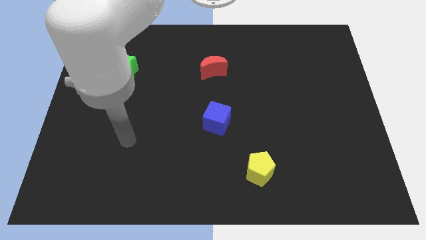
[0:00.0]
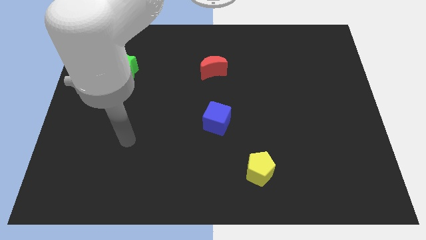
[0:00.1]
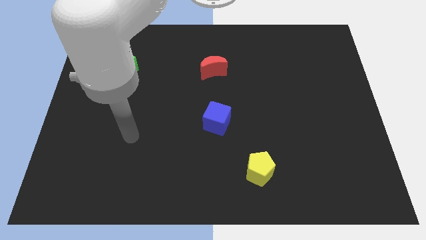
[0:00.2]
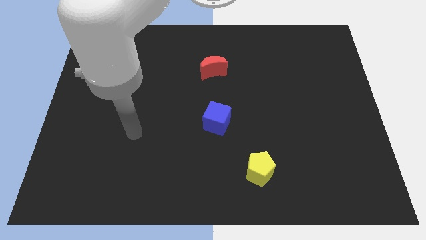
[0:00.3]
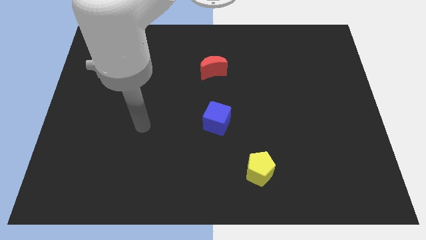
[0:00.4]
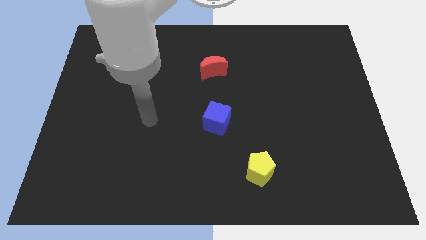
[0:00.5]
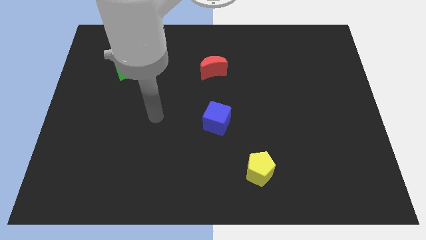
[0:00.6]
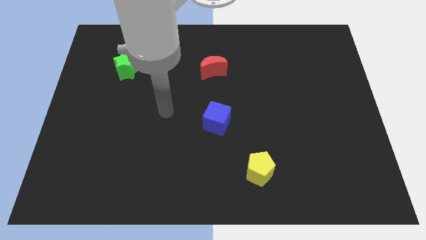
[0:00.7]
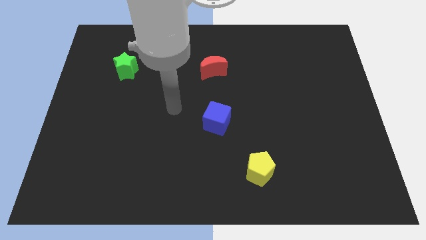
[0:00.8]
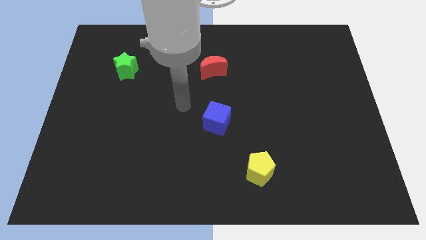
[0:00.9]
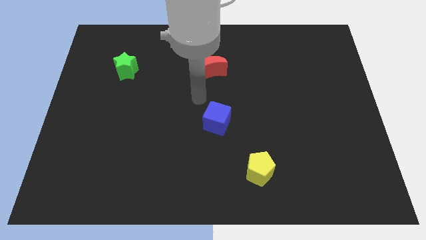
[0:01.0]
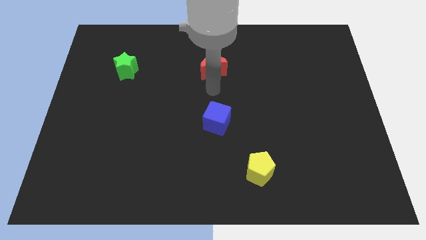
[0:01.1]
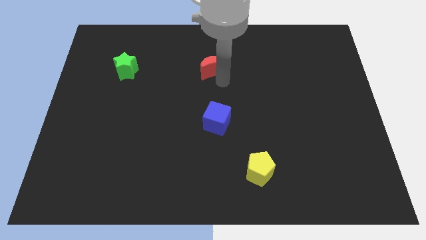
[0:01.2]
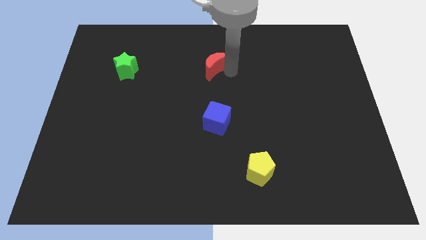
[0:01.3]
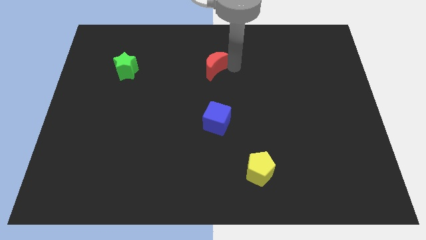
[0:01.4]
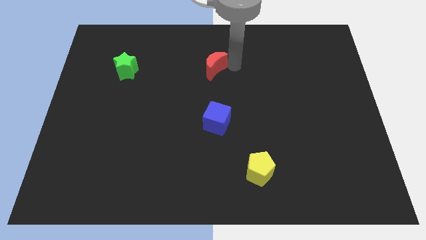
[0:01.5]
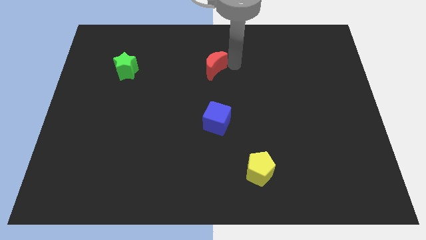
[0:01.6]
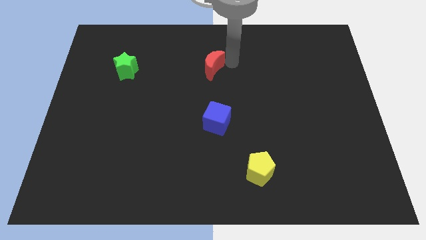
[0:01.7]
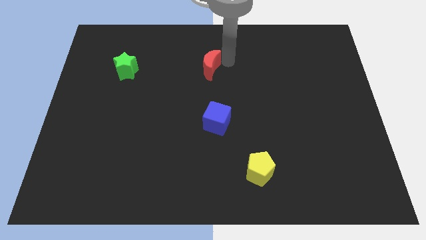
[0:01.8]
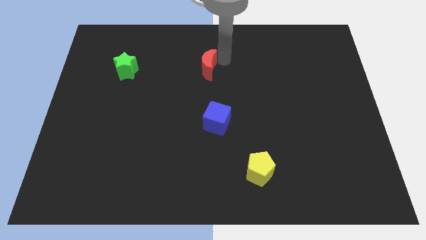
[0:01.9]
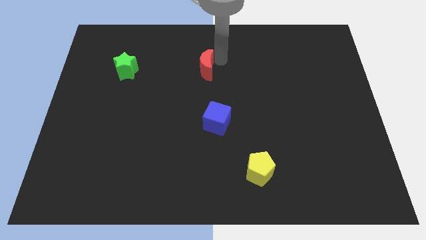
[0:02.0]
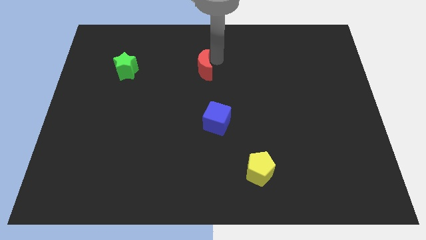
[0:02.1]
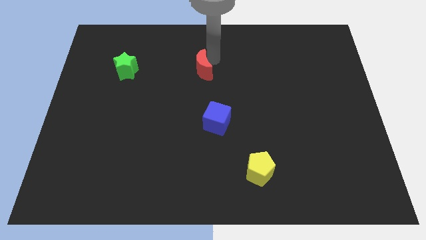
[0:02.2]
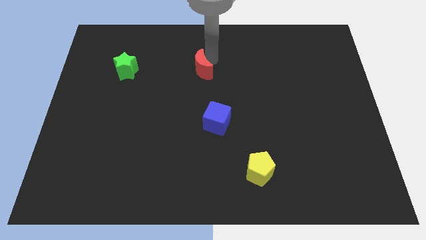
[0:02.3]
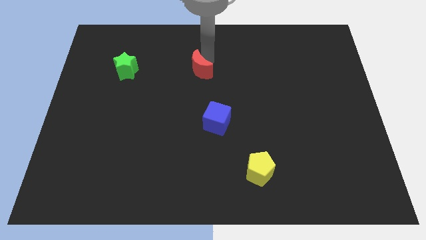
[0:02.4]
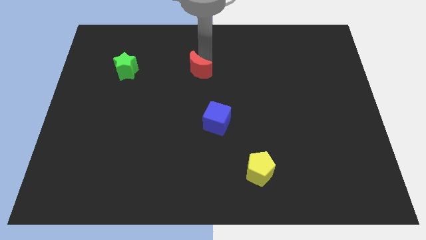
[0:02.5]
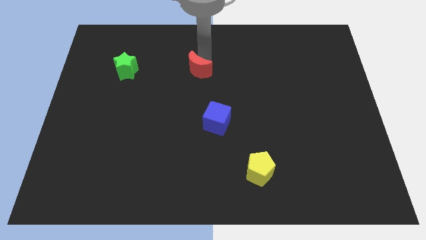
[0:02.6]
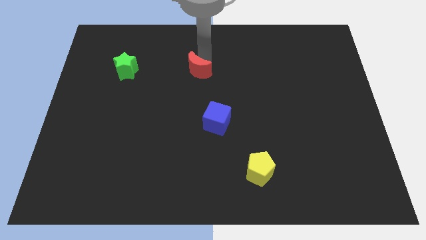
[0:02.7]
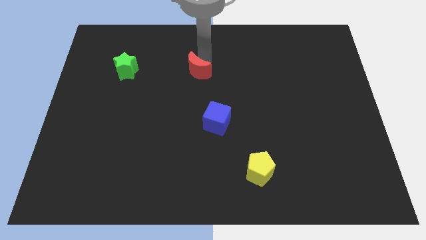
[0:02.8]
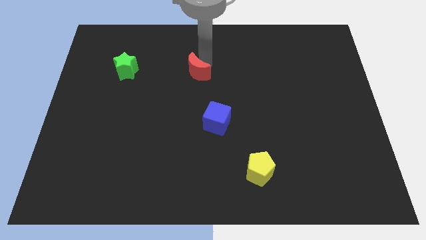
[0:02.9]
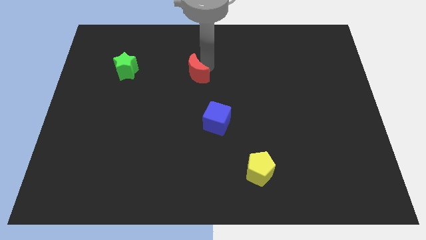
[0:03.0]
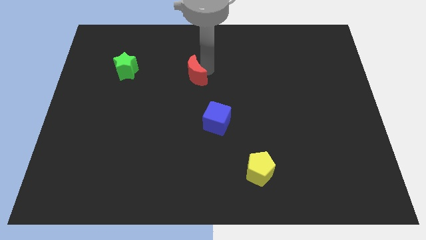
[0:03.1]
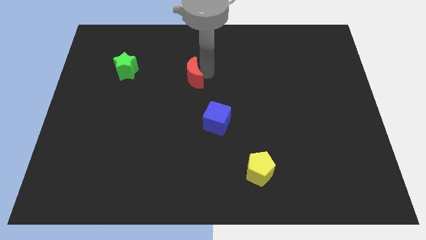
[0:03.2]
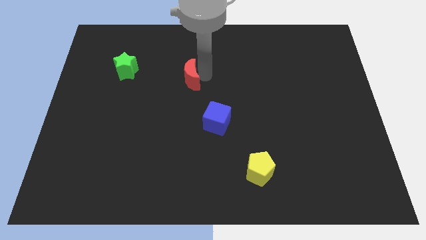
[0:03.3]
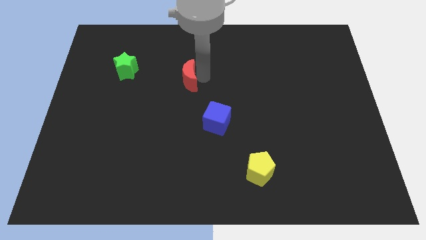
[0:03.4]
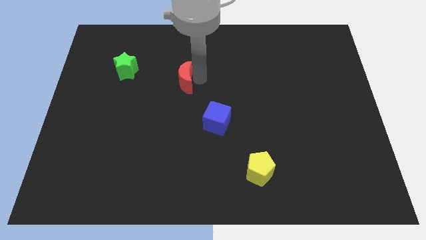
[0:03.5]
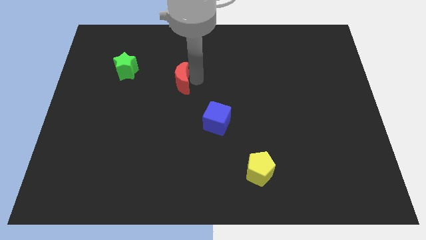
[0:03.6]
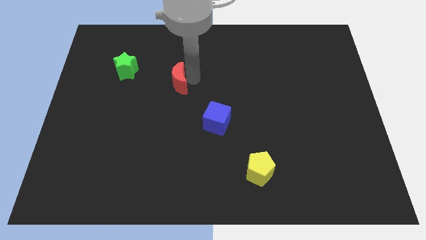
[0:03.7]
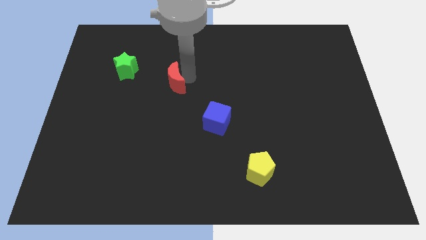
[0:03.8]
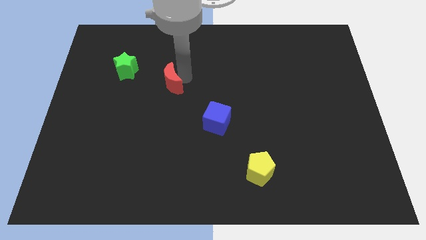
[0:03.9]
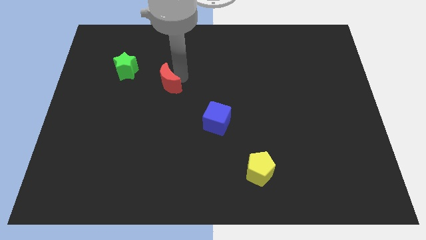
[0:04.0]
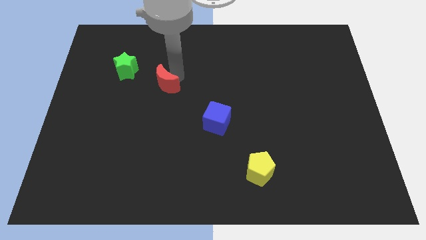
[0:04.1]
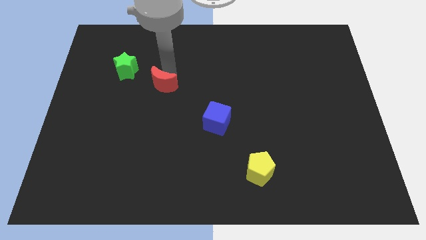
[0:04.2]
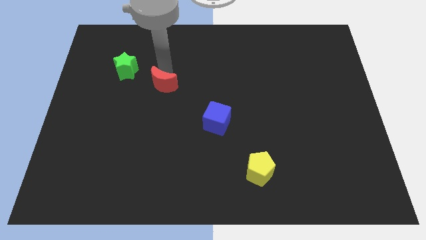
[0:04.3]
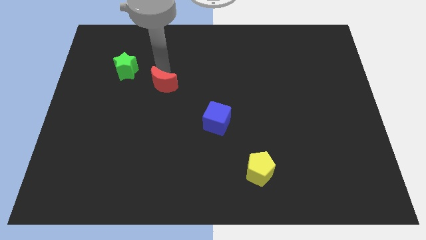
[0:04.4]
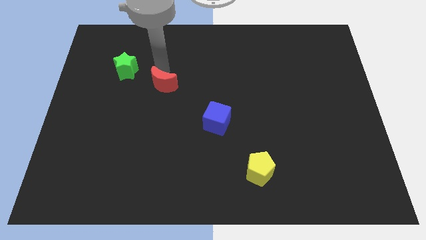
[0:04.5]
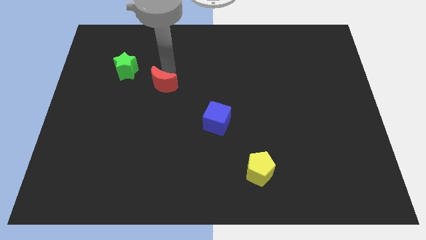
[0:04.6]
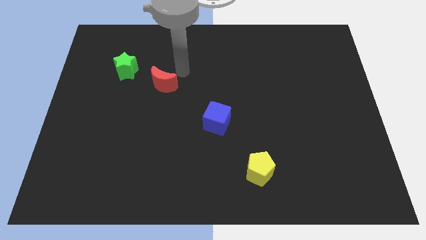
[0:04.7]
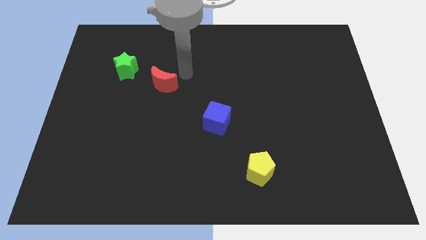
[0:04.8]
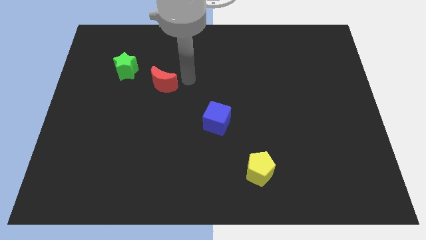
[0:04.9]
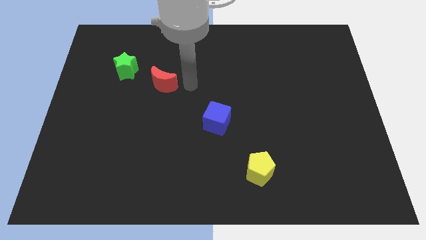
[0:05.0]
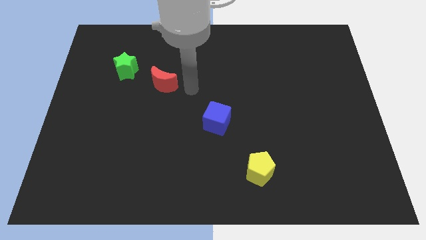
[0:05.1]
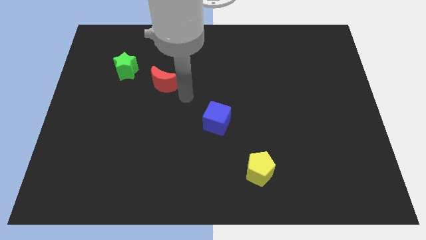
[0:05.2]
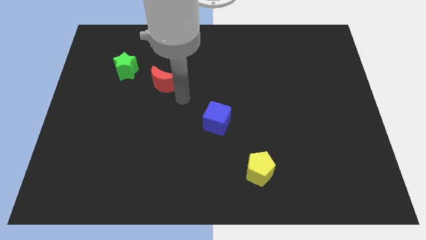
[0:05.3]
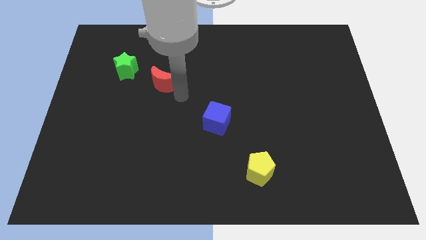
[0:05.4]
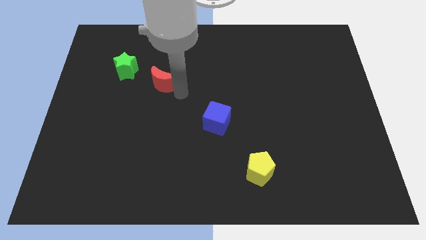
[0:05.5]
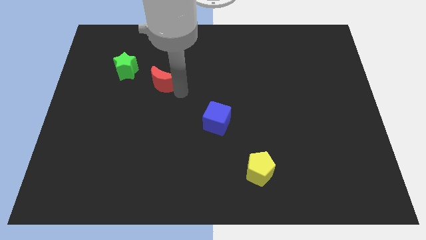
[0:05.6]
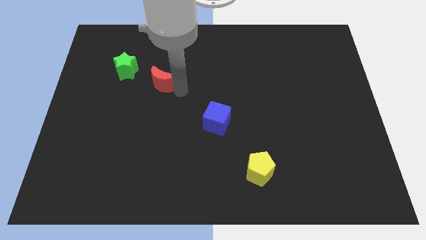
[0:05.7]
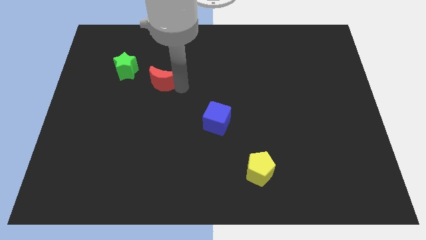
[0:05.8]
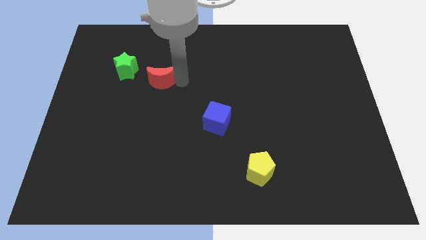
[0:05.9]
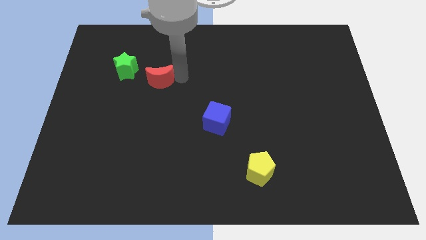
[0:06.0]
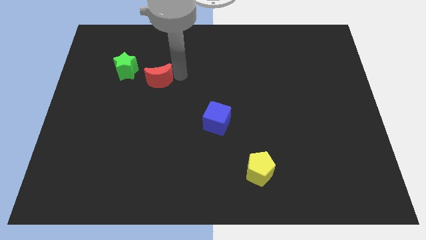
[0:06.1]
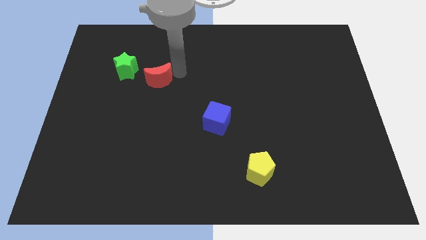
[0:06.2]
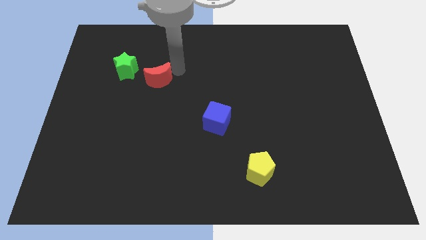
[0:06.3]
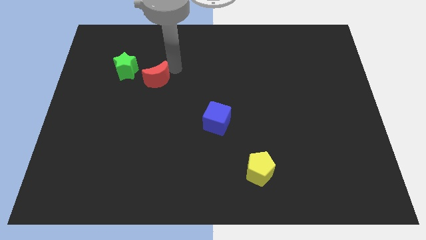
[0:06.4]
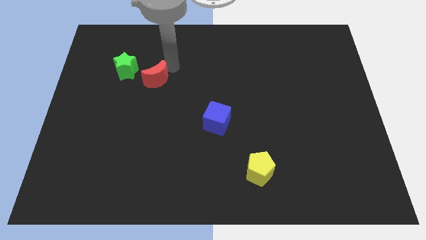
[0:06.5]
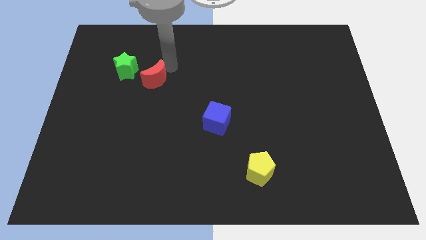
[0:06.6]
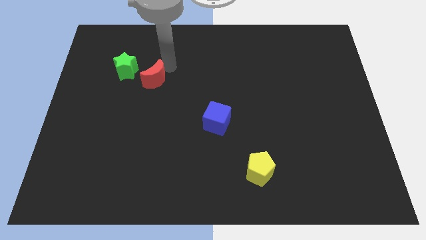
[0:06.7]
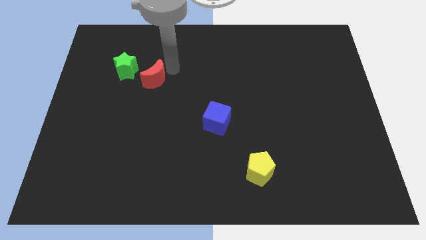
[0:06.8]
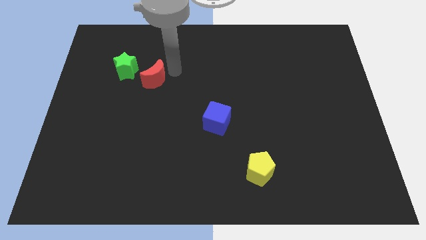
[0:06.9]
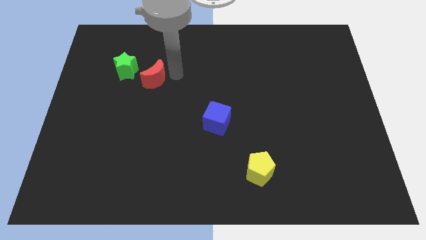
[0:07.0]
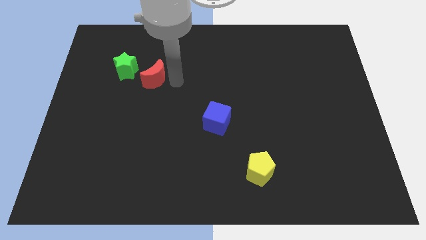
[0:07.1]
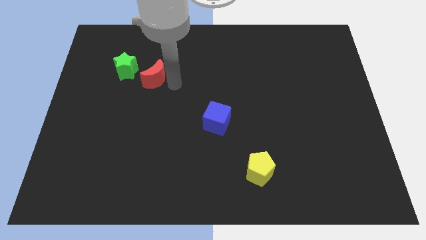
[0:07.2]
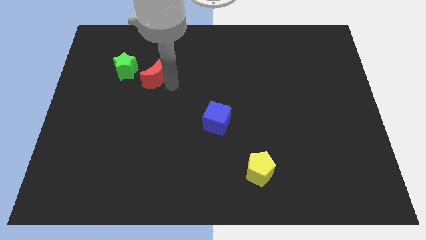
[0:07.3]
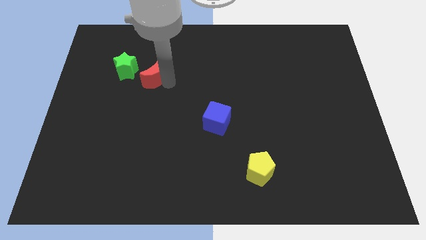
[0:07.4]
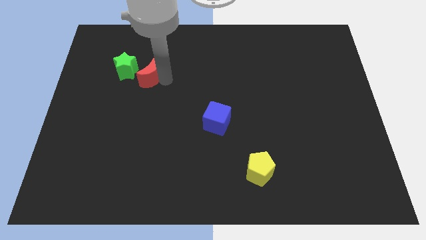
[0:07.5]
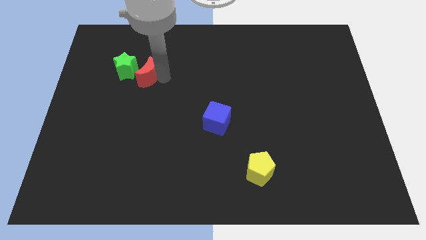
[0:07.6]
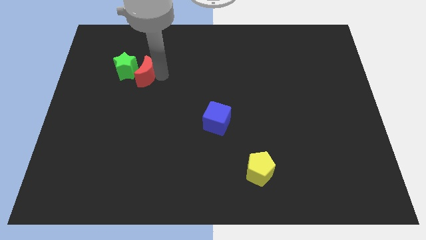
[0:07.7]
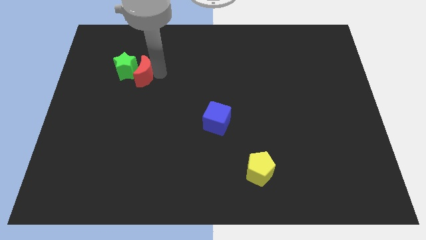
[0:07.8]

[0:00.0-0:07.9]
put the moon to the star

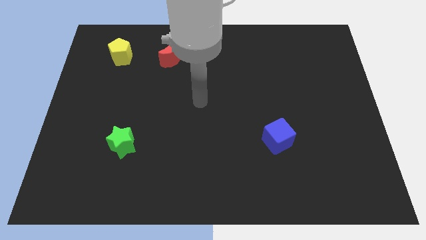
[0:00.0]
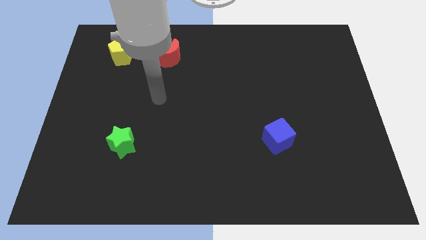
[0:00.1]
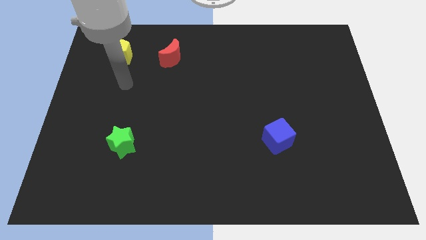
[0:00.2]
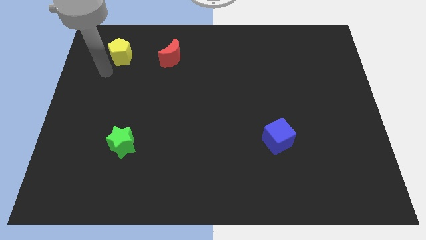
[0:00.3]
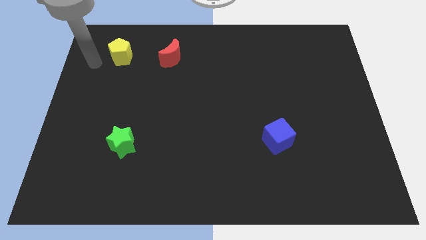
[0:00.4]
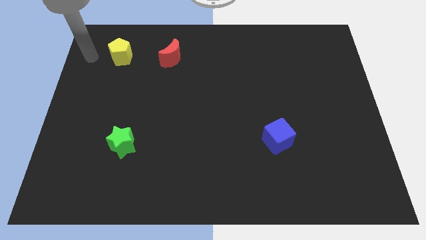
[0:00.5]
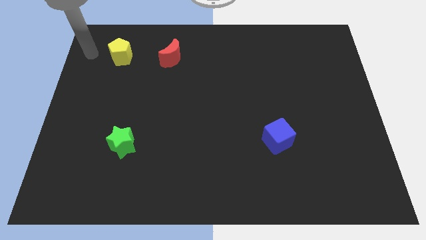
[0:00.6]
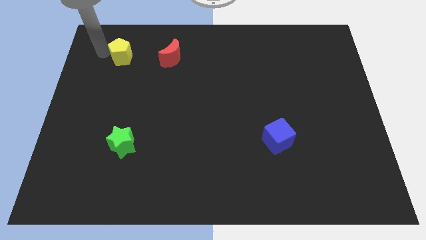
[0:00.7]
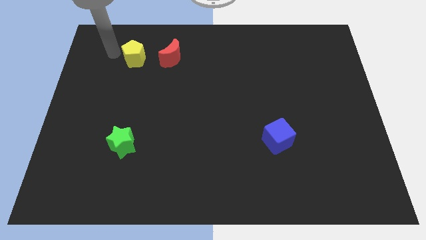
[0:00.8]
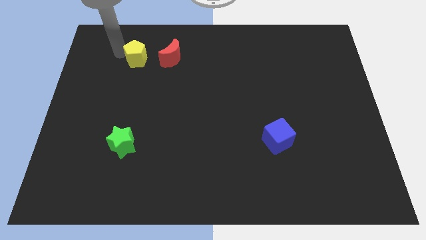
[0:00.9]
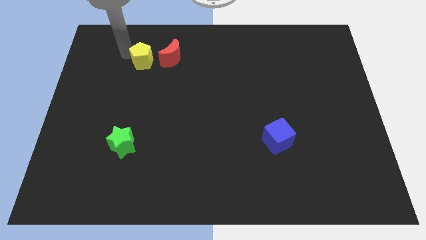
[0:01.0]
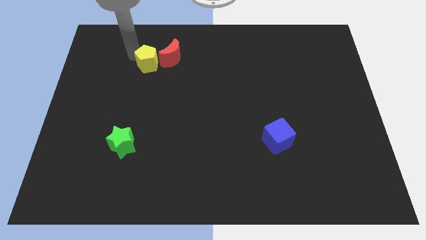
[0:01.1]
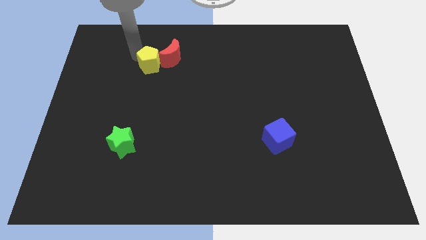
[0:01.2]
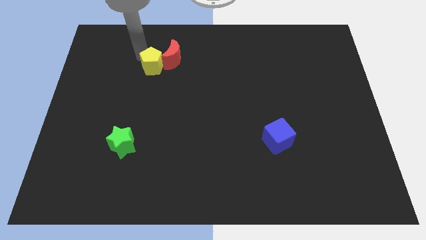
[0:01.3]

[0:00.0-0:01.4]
move the yellow block to the red block
